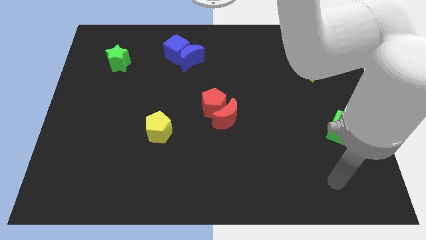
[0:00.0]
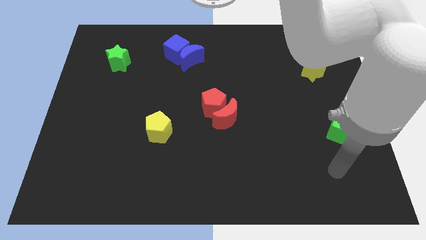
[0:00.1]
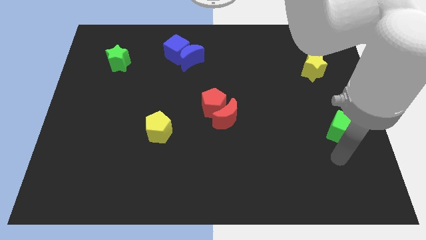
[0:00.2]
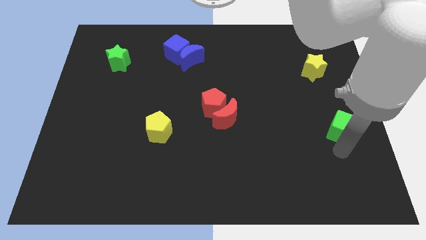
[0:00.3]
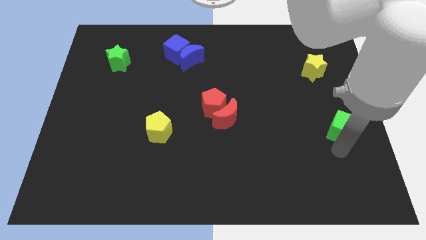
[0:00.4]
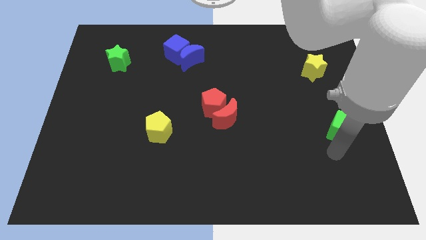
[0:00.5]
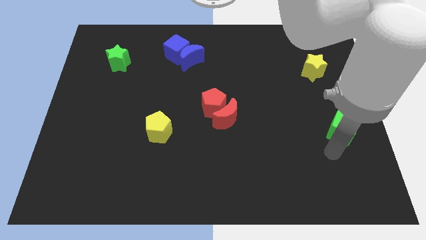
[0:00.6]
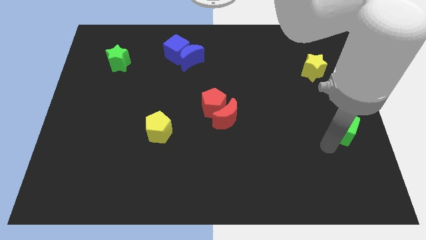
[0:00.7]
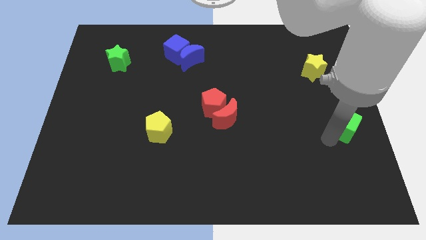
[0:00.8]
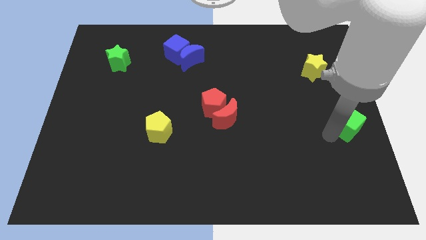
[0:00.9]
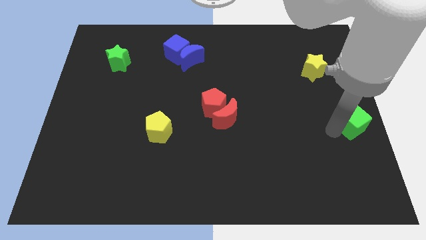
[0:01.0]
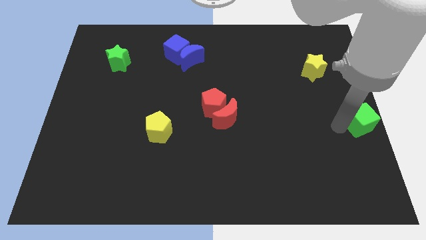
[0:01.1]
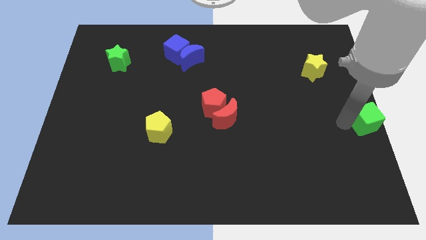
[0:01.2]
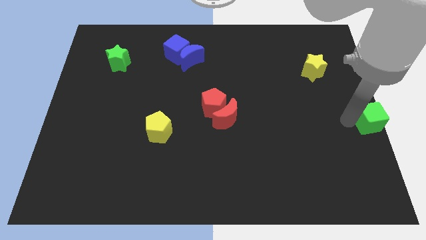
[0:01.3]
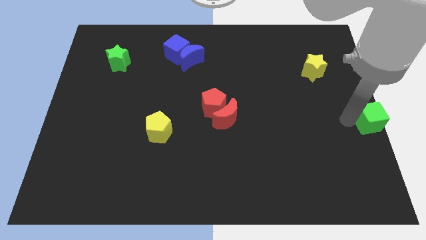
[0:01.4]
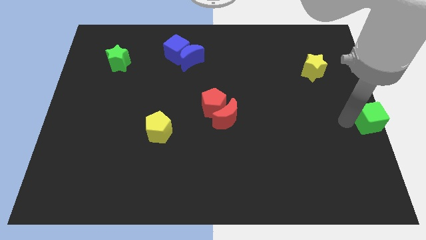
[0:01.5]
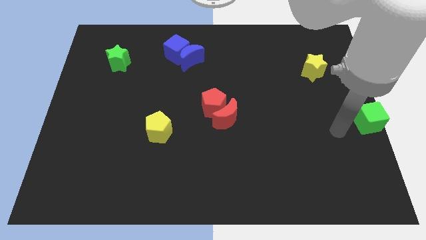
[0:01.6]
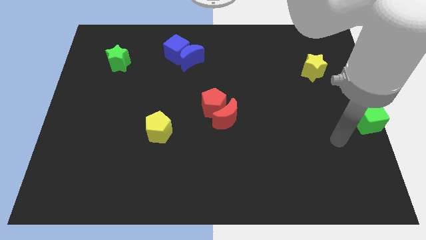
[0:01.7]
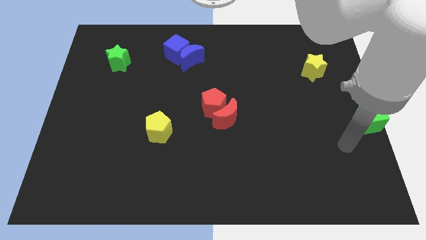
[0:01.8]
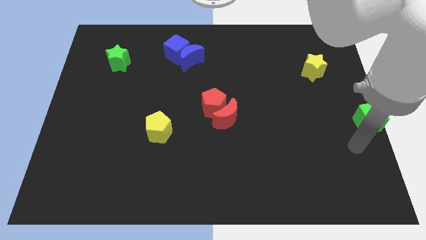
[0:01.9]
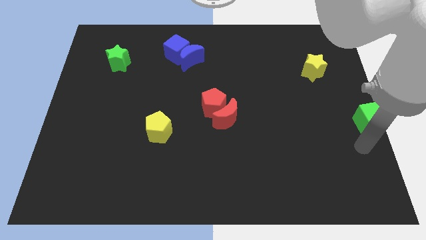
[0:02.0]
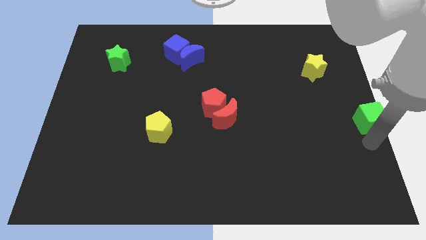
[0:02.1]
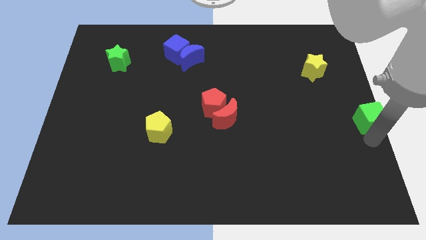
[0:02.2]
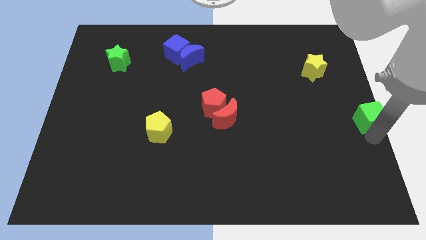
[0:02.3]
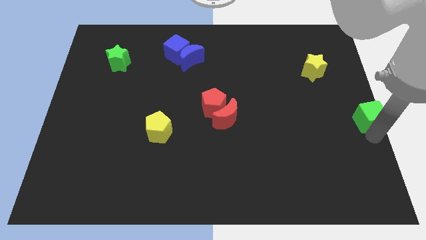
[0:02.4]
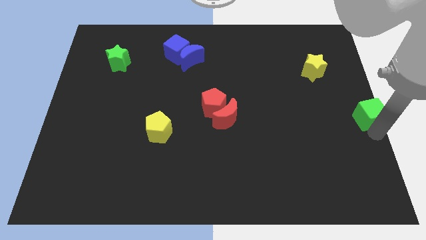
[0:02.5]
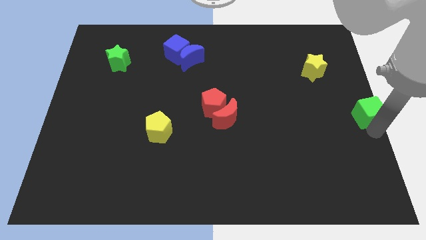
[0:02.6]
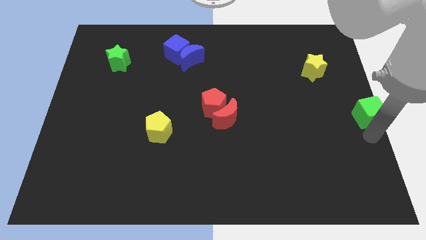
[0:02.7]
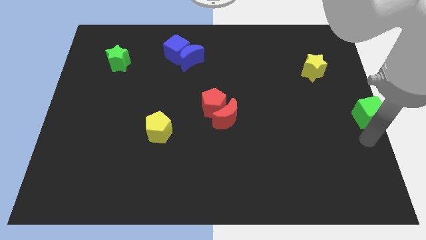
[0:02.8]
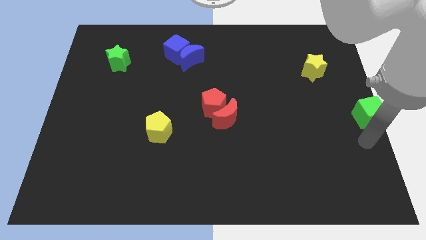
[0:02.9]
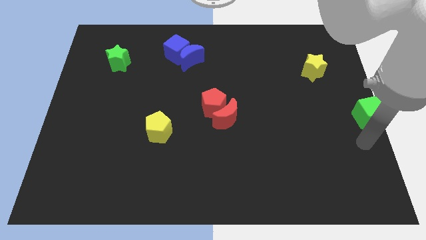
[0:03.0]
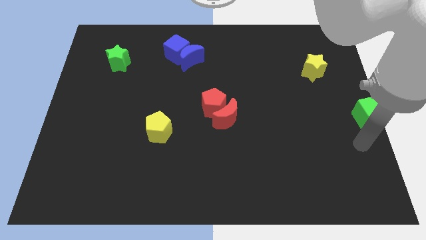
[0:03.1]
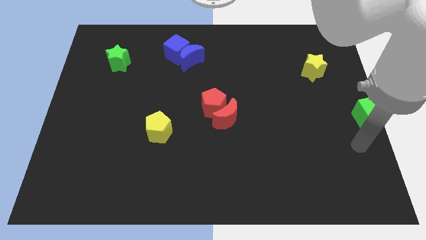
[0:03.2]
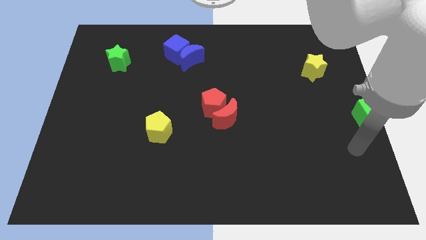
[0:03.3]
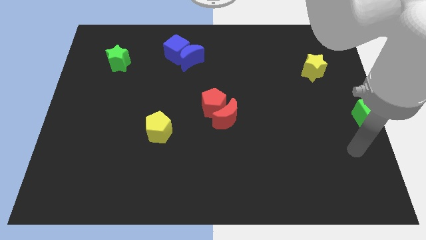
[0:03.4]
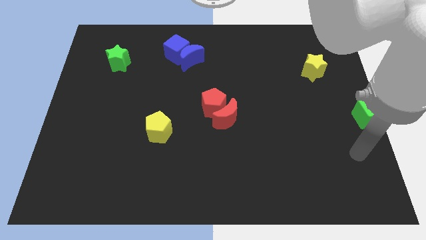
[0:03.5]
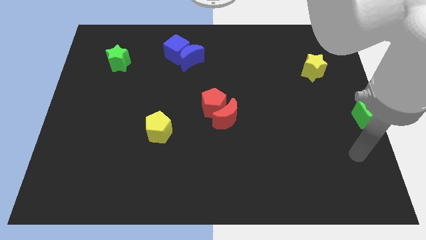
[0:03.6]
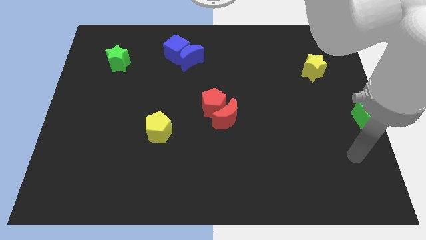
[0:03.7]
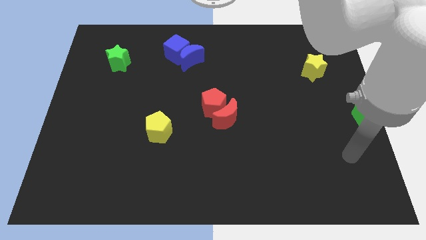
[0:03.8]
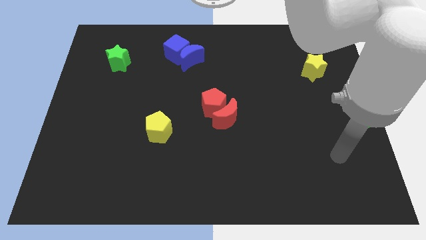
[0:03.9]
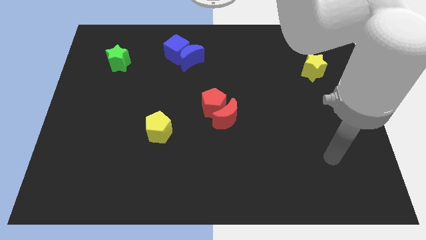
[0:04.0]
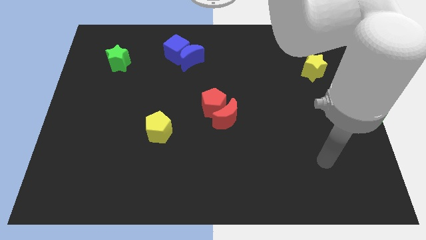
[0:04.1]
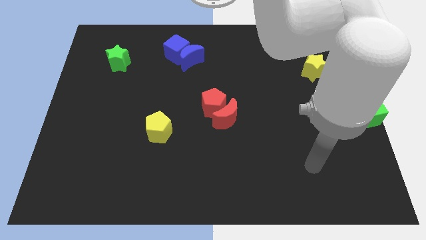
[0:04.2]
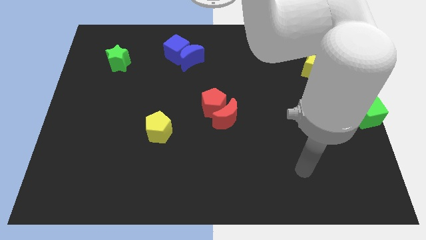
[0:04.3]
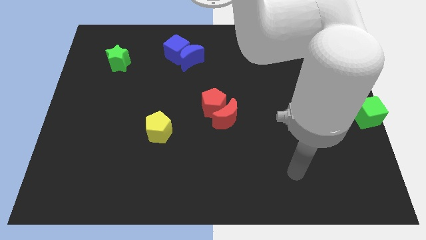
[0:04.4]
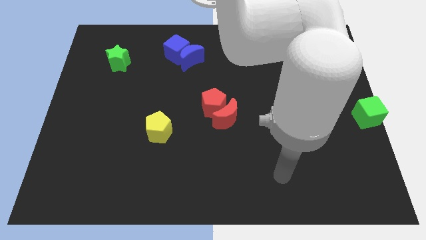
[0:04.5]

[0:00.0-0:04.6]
place the green cube at the center right side of the board

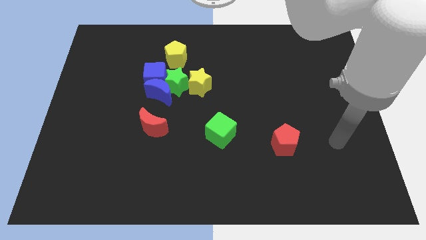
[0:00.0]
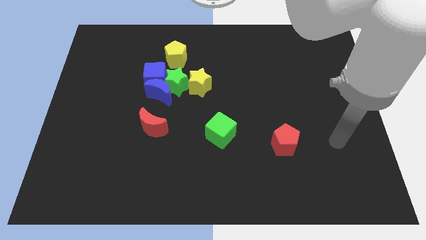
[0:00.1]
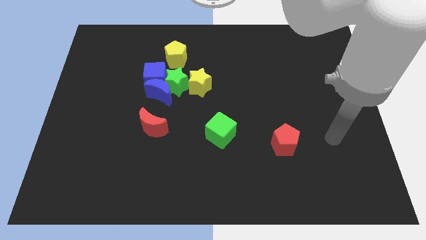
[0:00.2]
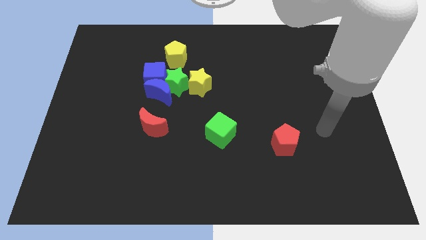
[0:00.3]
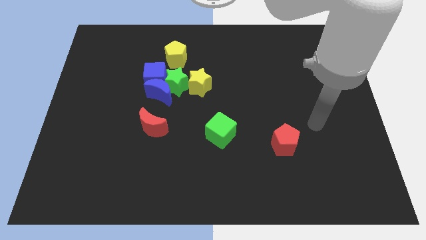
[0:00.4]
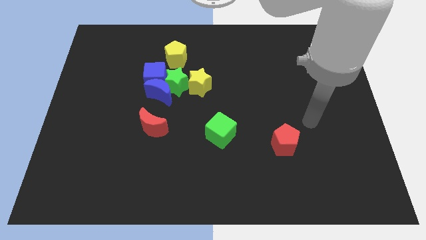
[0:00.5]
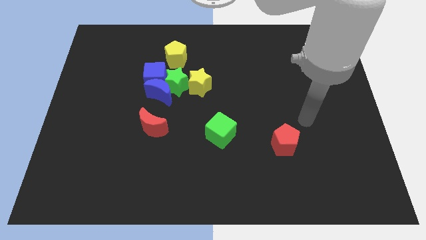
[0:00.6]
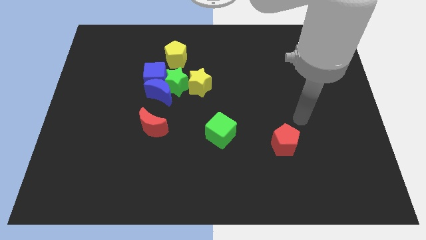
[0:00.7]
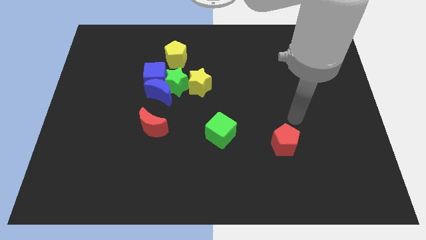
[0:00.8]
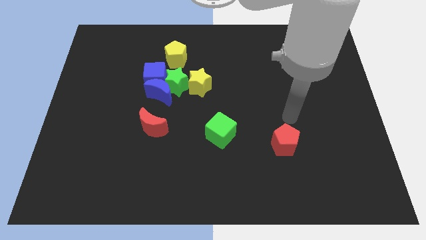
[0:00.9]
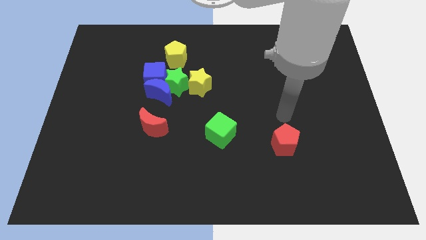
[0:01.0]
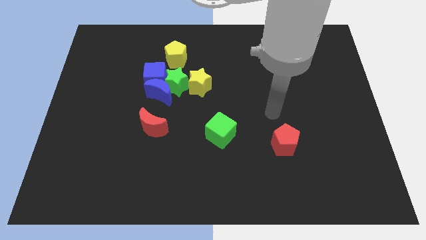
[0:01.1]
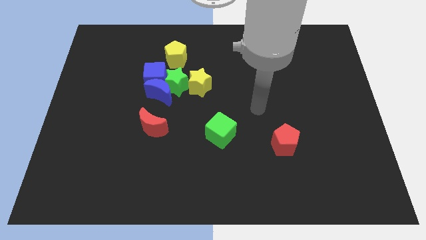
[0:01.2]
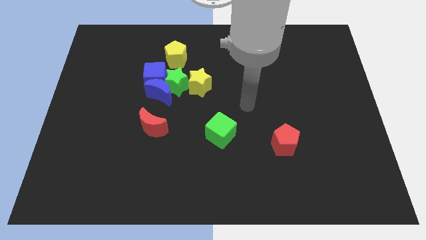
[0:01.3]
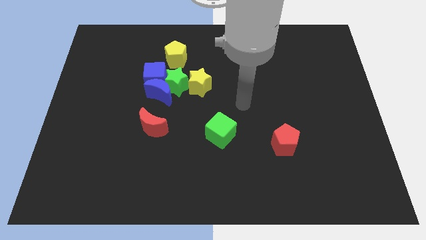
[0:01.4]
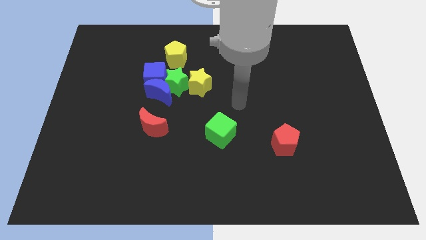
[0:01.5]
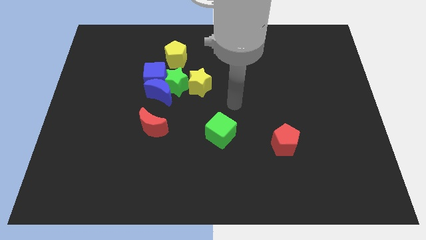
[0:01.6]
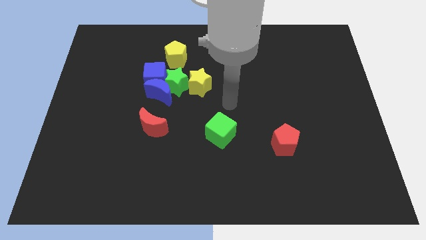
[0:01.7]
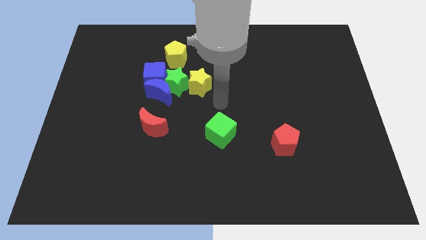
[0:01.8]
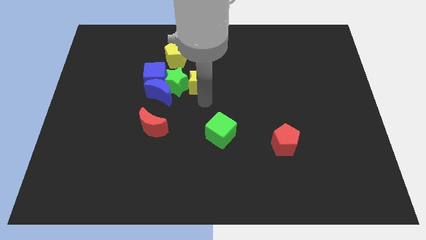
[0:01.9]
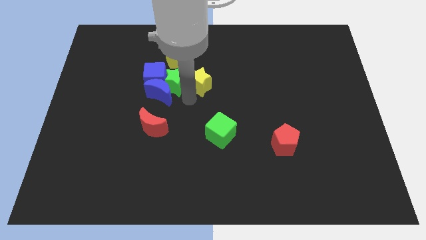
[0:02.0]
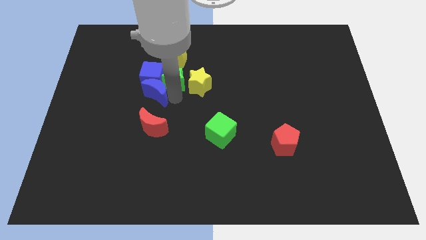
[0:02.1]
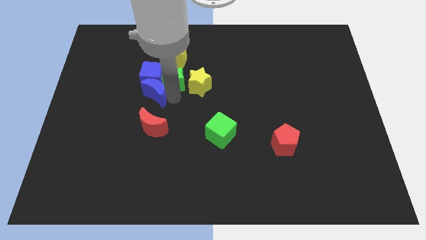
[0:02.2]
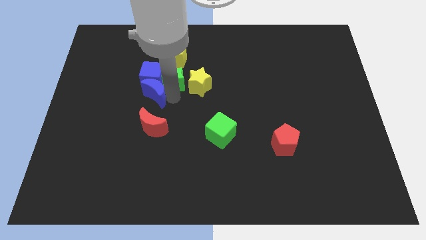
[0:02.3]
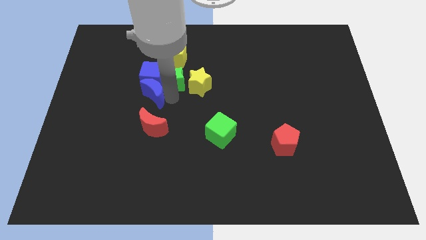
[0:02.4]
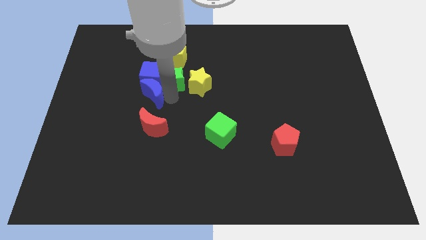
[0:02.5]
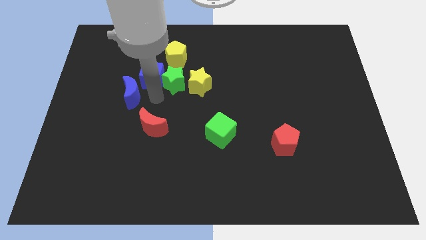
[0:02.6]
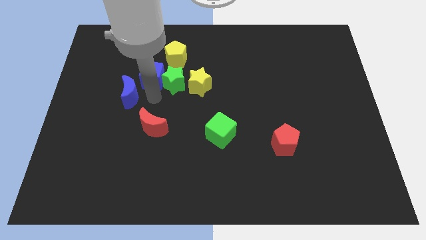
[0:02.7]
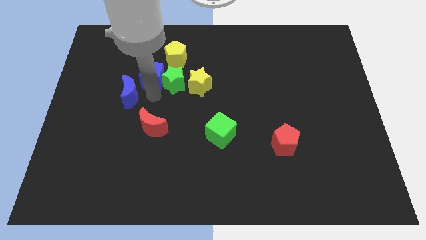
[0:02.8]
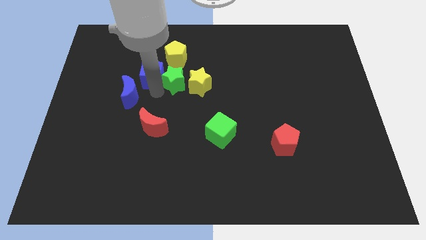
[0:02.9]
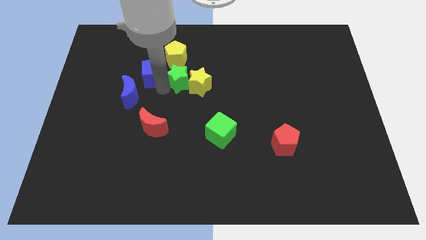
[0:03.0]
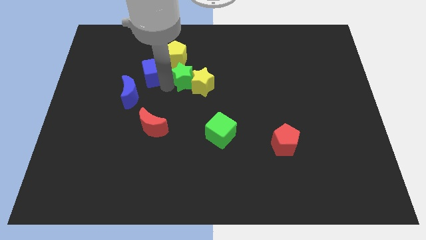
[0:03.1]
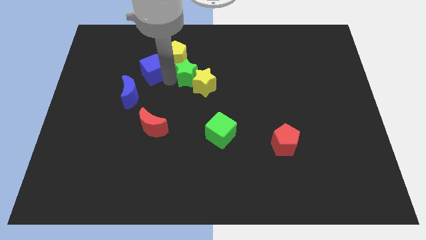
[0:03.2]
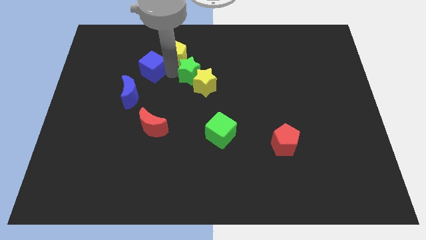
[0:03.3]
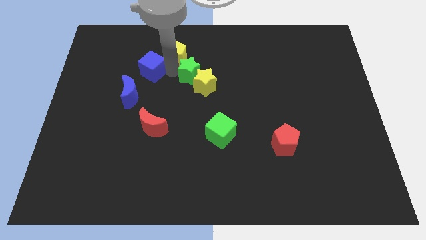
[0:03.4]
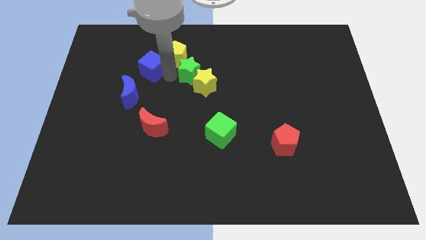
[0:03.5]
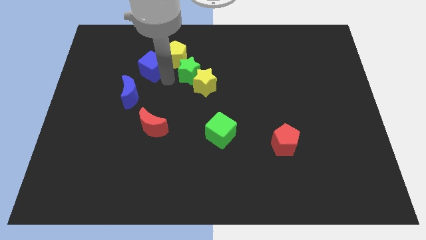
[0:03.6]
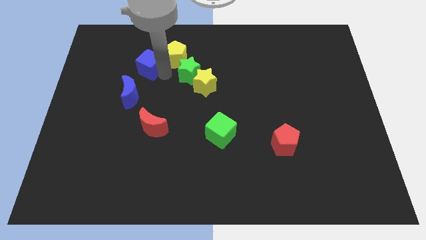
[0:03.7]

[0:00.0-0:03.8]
move the blue crescent to left of blue cube

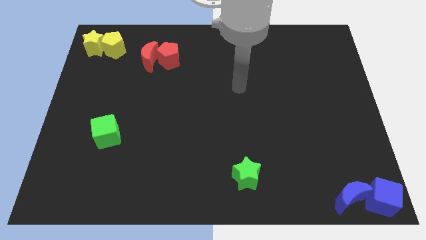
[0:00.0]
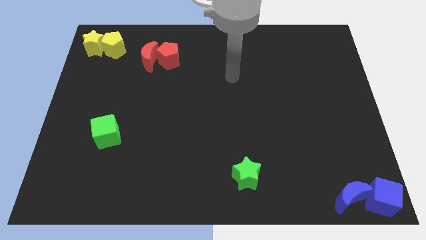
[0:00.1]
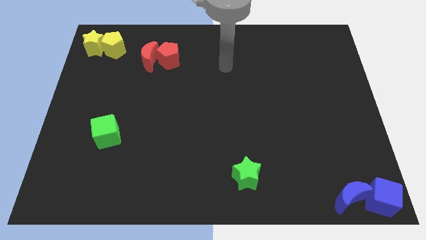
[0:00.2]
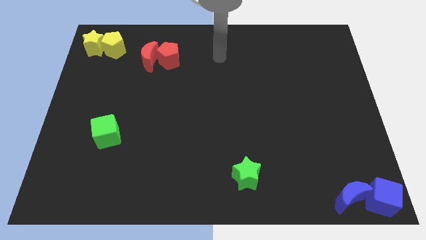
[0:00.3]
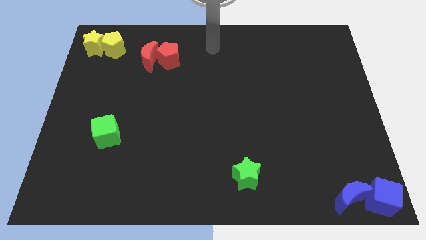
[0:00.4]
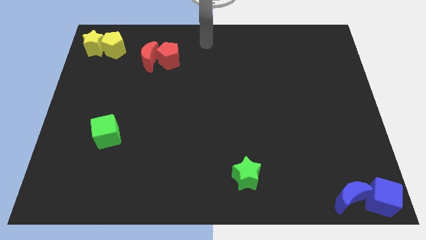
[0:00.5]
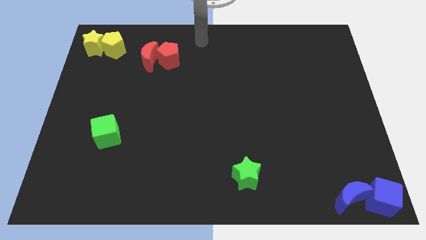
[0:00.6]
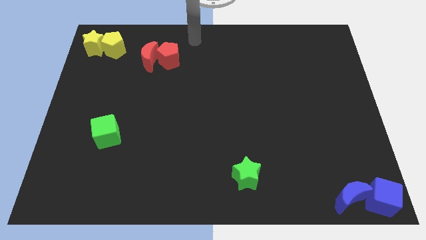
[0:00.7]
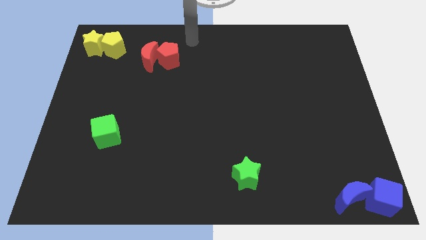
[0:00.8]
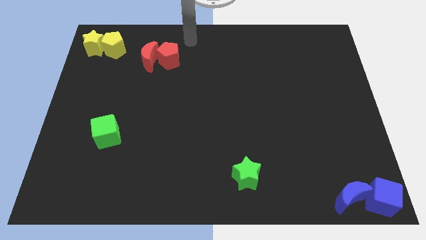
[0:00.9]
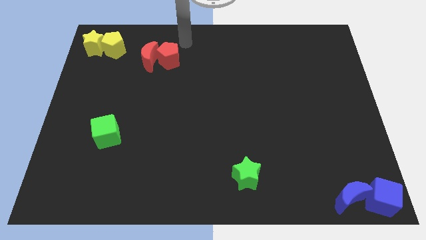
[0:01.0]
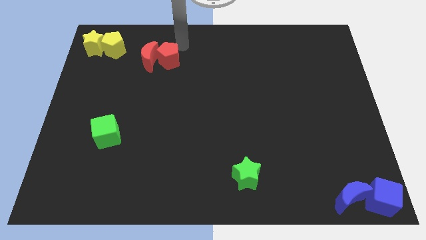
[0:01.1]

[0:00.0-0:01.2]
place your arm at the top right side of red pentagon
